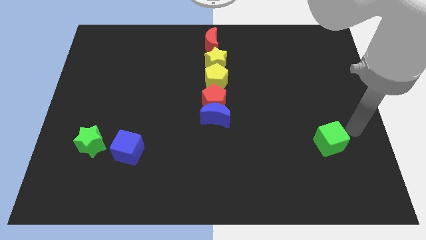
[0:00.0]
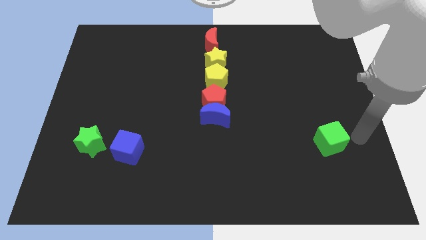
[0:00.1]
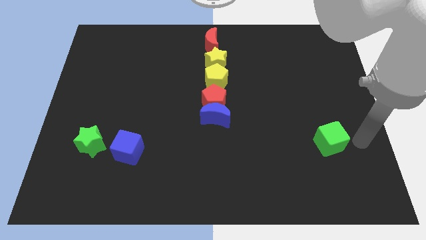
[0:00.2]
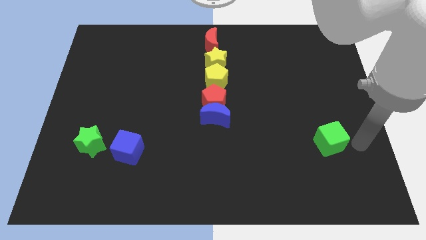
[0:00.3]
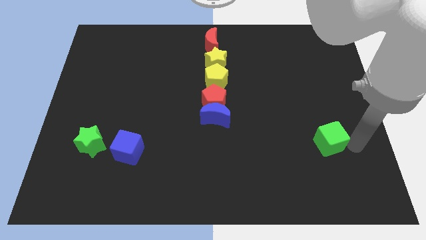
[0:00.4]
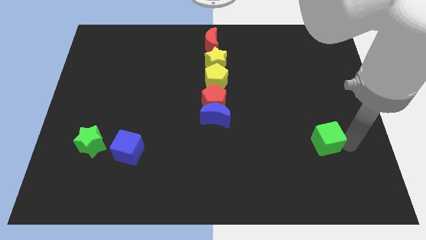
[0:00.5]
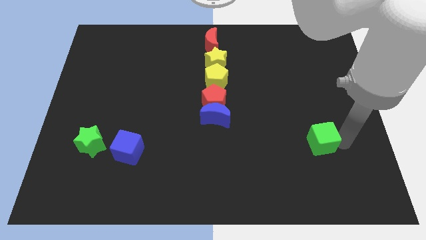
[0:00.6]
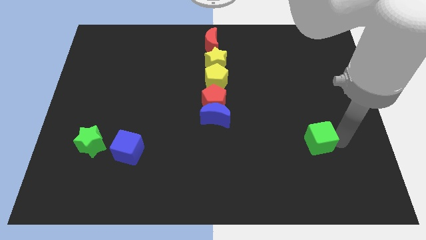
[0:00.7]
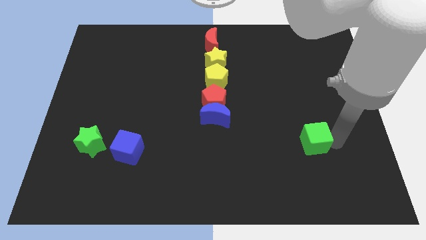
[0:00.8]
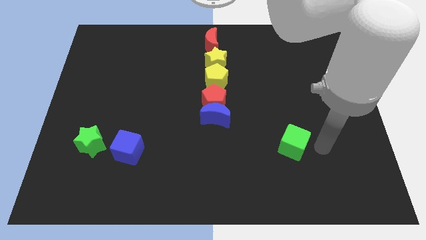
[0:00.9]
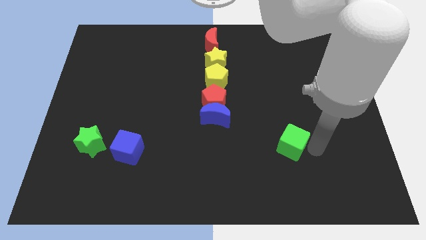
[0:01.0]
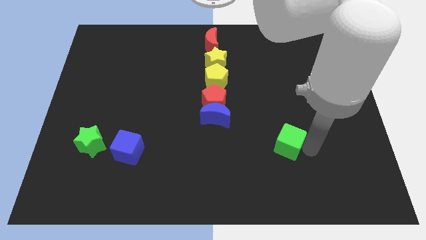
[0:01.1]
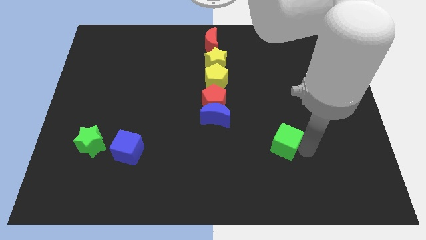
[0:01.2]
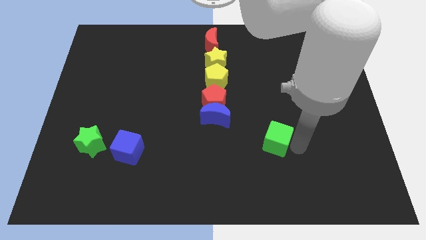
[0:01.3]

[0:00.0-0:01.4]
move the green cube to the left side of the board

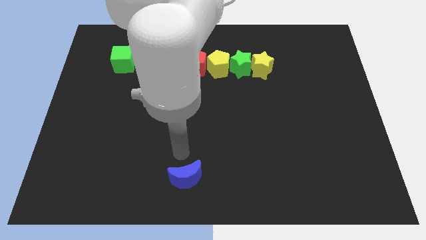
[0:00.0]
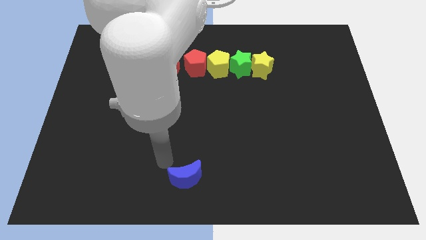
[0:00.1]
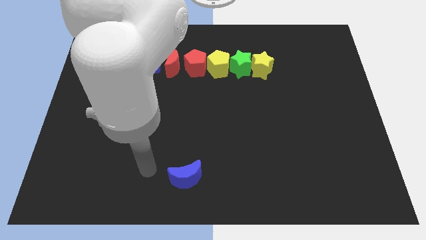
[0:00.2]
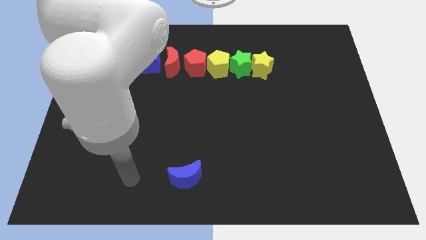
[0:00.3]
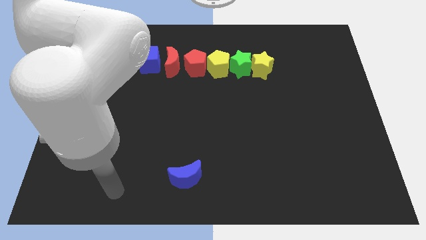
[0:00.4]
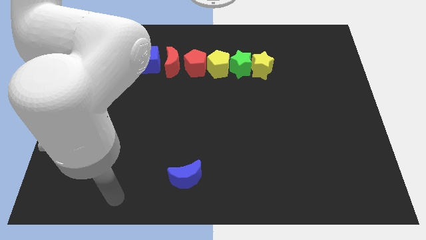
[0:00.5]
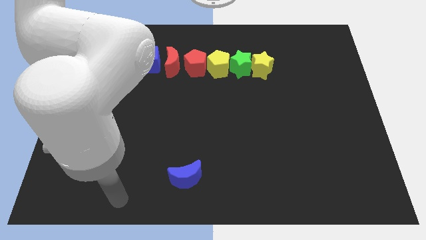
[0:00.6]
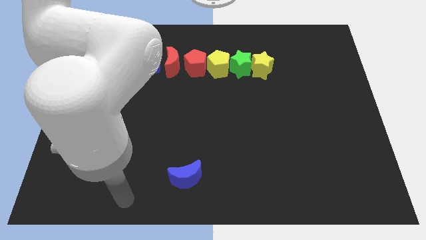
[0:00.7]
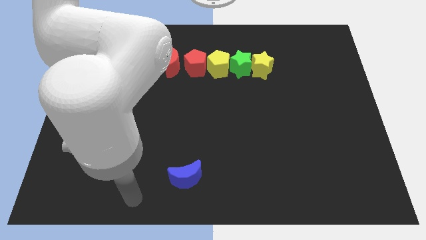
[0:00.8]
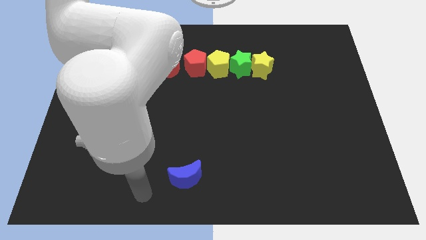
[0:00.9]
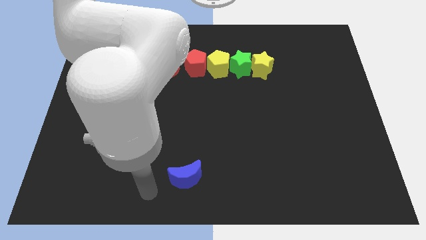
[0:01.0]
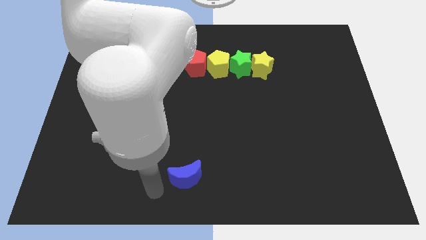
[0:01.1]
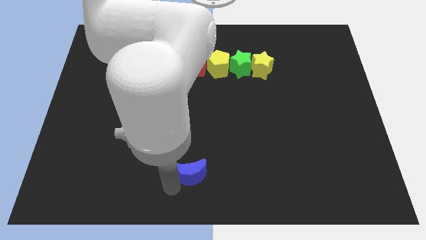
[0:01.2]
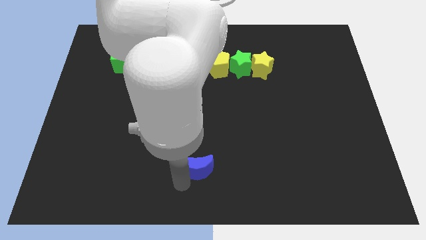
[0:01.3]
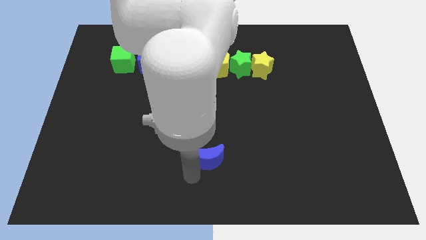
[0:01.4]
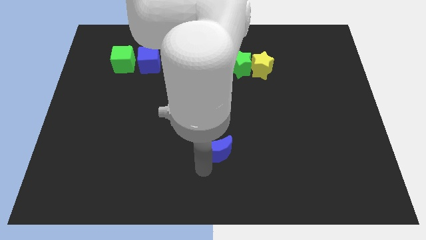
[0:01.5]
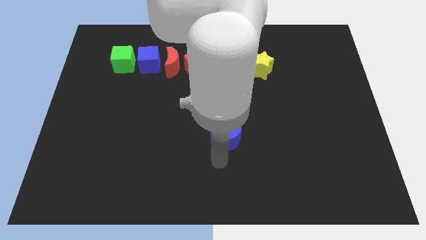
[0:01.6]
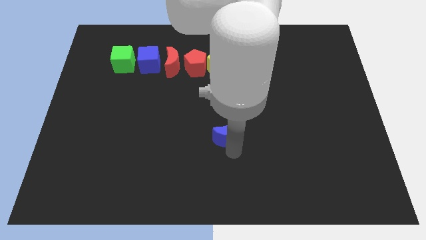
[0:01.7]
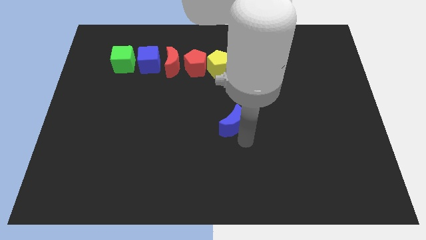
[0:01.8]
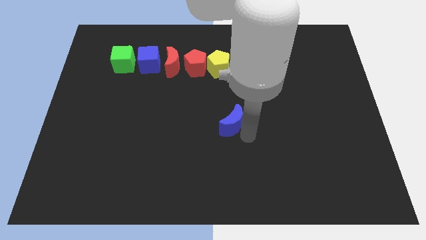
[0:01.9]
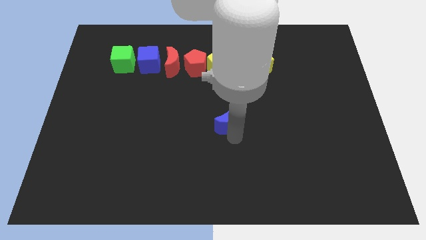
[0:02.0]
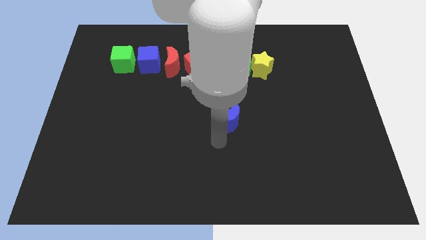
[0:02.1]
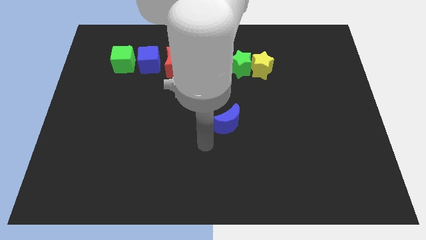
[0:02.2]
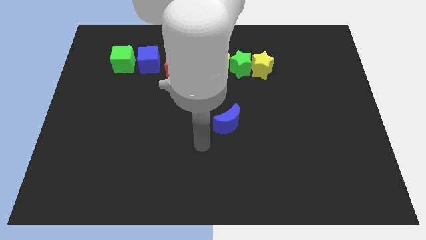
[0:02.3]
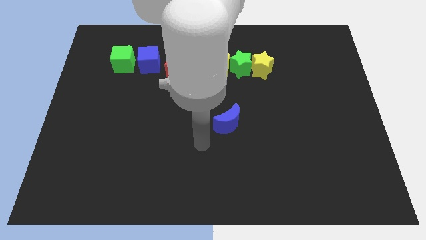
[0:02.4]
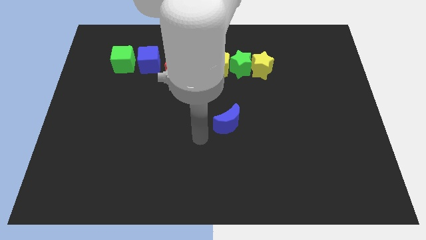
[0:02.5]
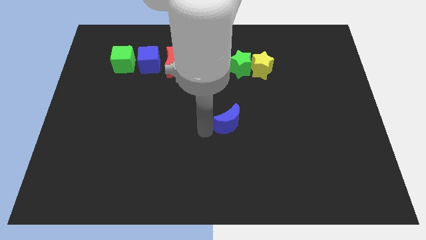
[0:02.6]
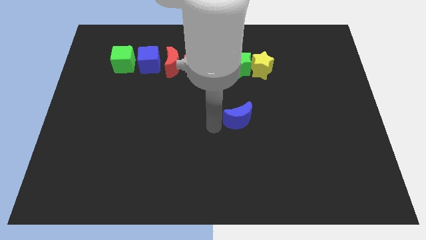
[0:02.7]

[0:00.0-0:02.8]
place blue crescent below green star

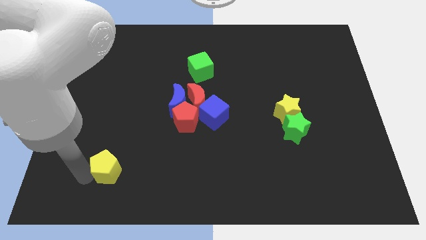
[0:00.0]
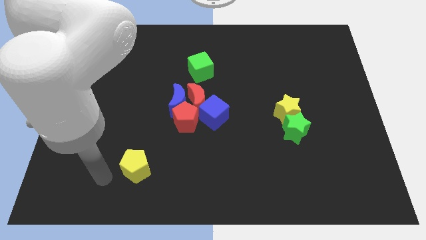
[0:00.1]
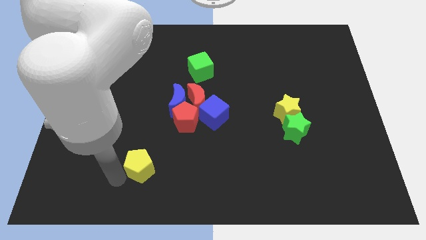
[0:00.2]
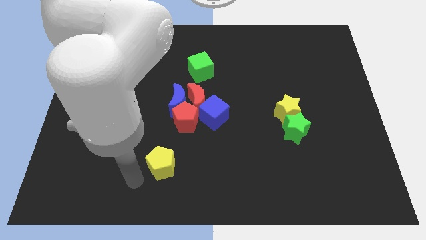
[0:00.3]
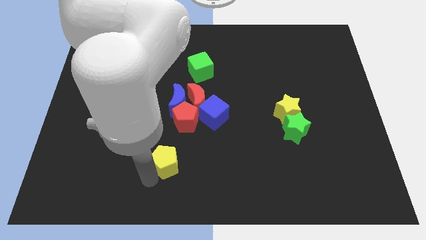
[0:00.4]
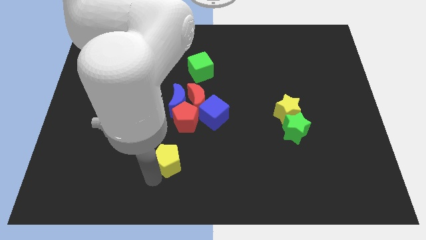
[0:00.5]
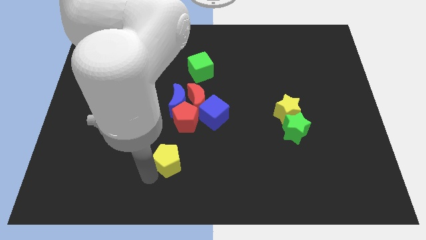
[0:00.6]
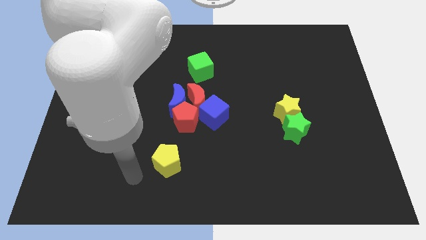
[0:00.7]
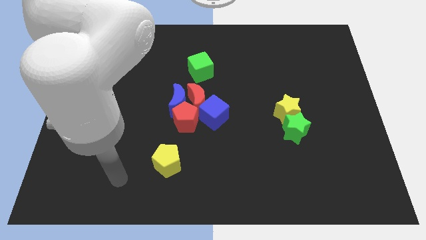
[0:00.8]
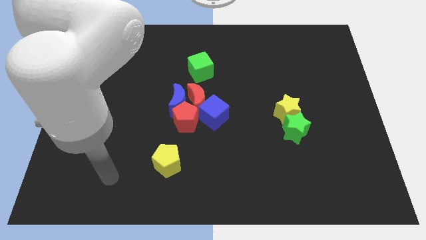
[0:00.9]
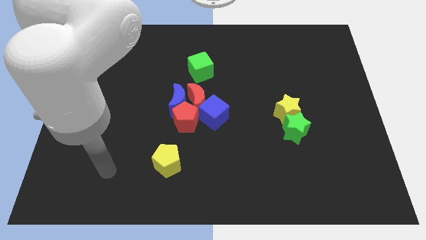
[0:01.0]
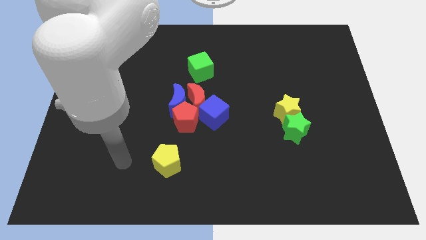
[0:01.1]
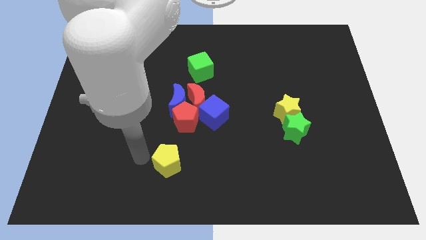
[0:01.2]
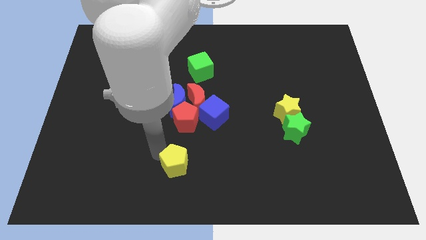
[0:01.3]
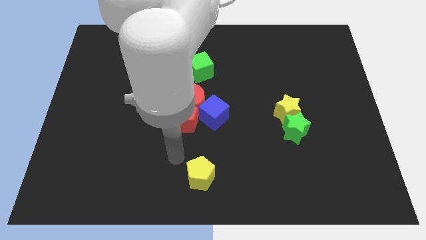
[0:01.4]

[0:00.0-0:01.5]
place the yellow pentagon vertically below the blue moon

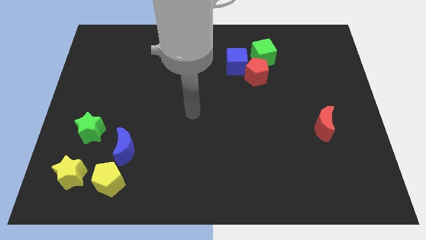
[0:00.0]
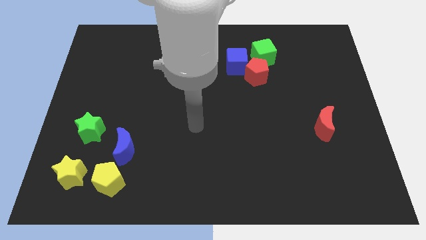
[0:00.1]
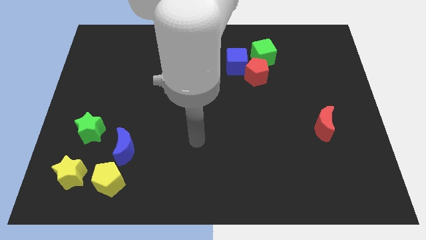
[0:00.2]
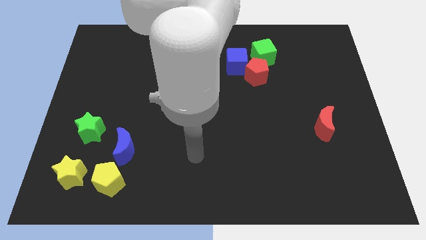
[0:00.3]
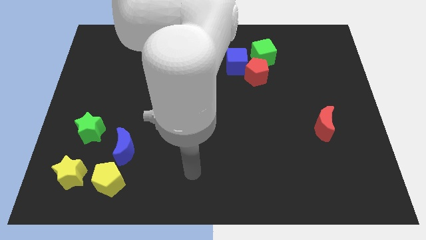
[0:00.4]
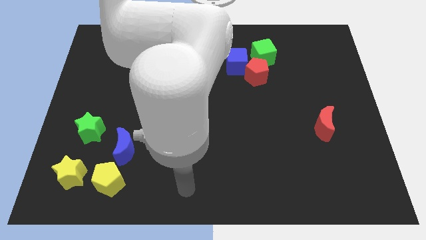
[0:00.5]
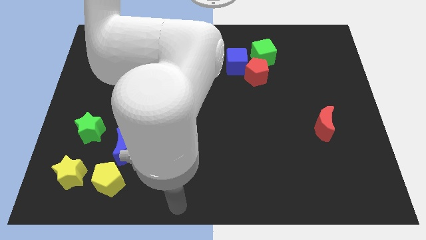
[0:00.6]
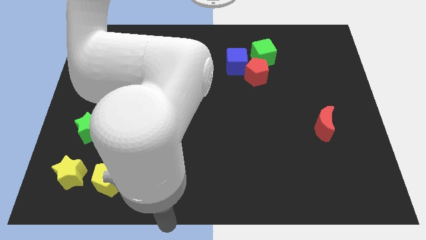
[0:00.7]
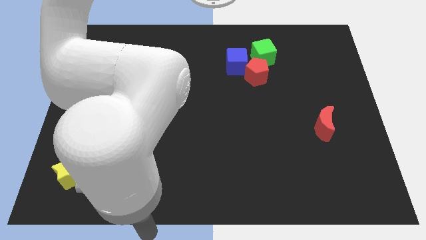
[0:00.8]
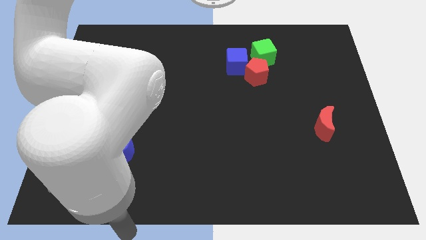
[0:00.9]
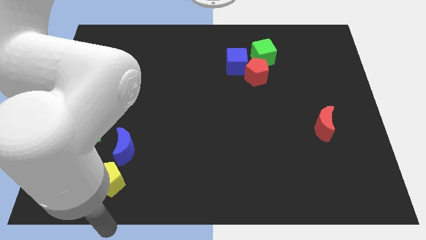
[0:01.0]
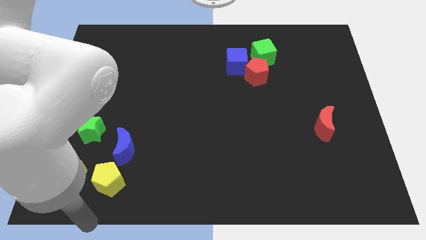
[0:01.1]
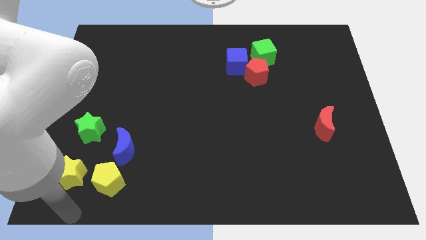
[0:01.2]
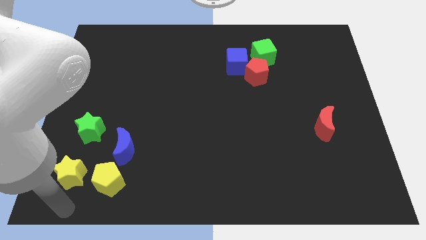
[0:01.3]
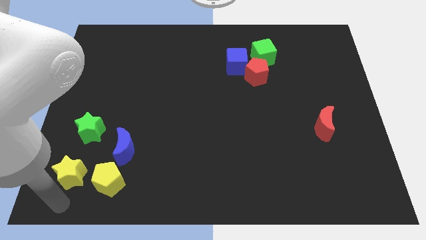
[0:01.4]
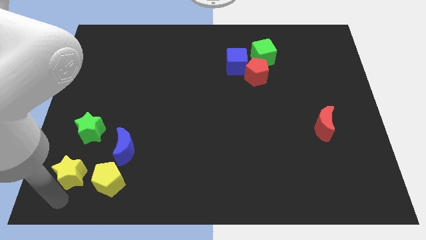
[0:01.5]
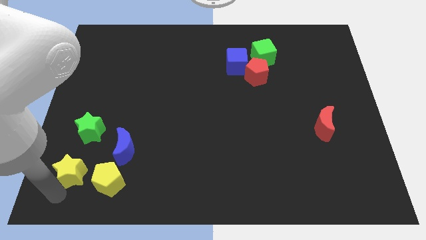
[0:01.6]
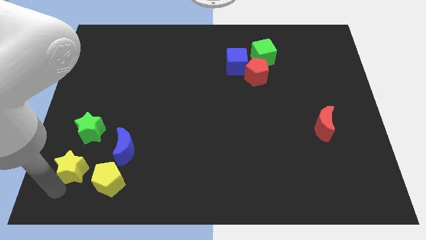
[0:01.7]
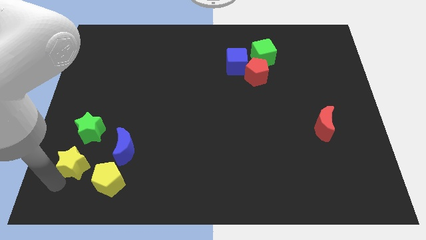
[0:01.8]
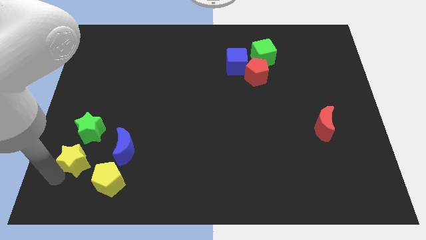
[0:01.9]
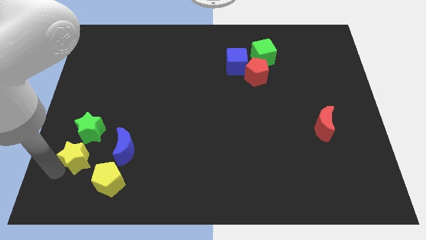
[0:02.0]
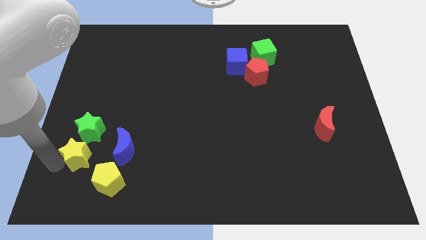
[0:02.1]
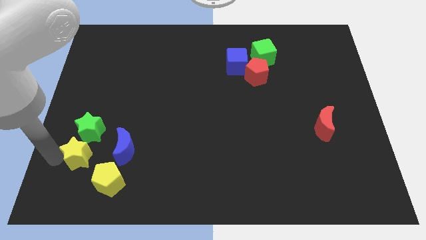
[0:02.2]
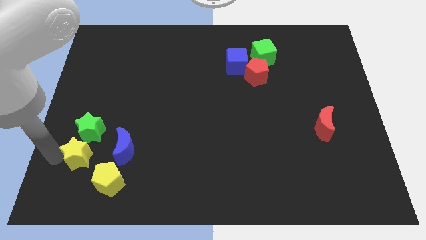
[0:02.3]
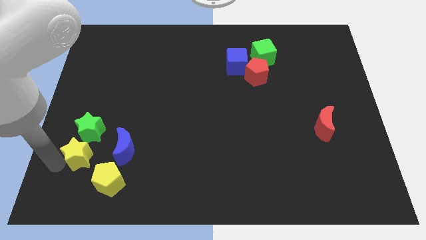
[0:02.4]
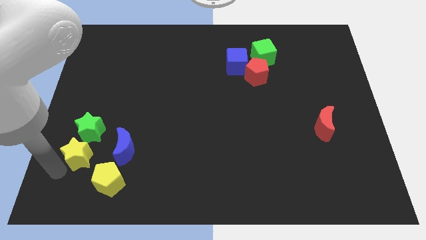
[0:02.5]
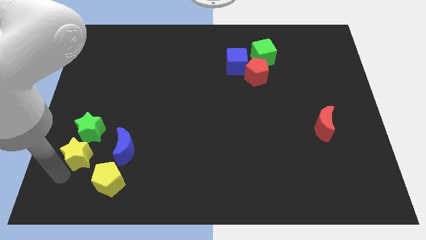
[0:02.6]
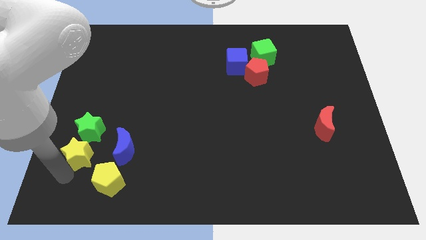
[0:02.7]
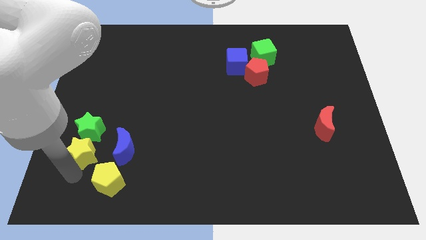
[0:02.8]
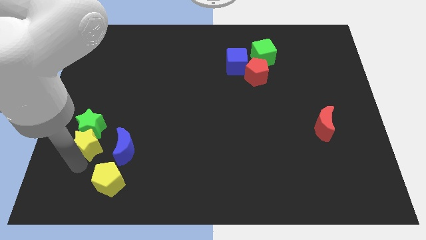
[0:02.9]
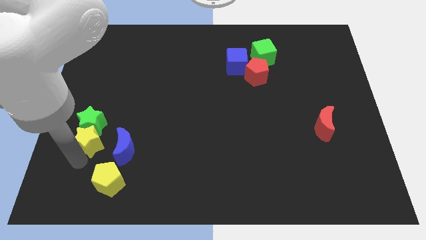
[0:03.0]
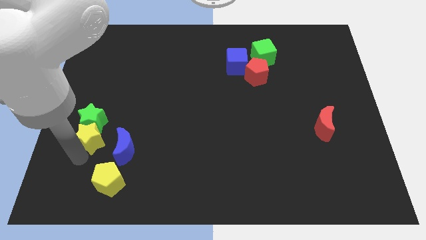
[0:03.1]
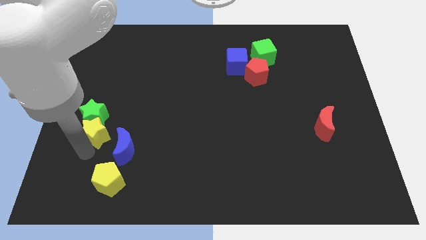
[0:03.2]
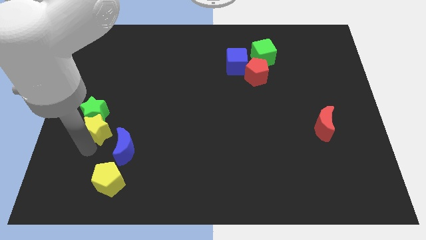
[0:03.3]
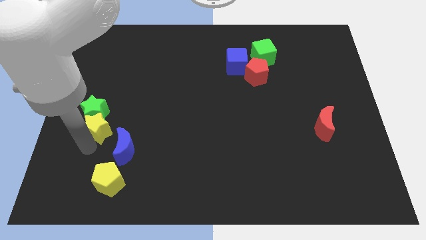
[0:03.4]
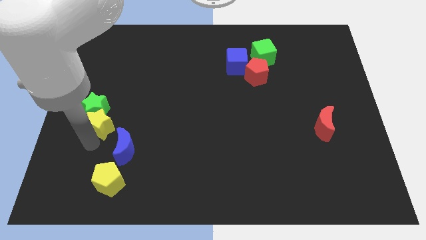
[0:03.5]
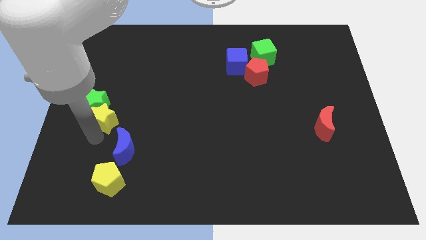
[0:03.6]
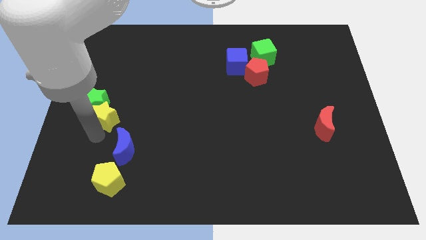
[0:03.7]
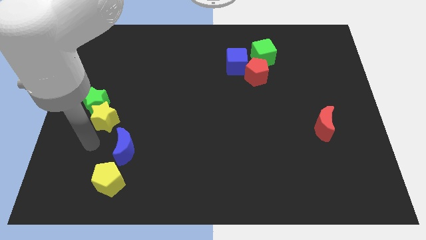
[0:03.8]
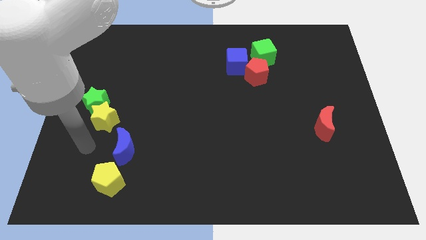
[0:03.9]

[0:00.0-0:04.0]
push the yellow star into the green star
